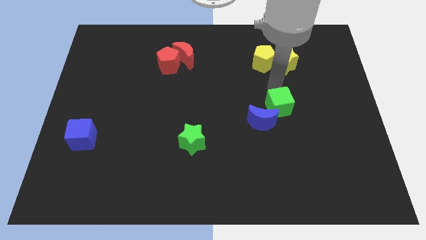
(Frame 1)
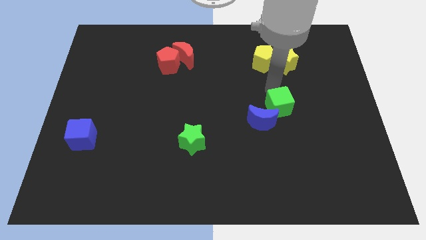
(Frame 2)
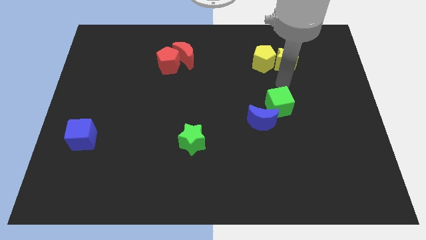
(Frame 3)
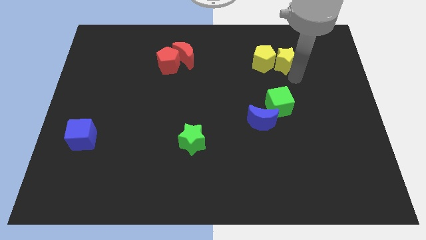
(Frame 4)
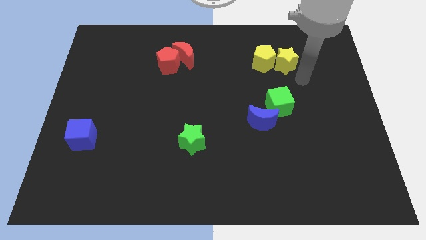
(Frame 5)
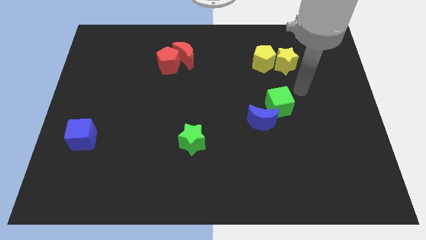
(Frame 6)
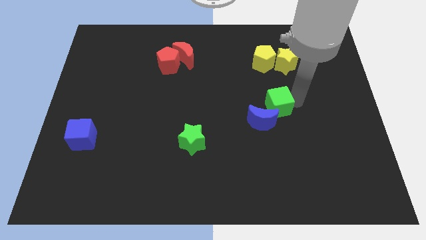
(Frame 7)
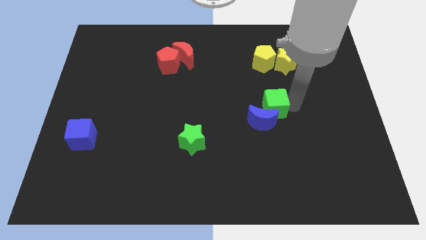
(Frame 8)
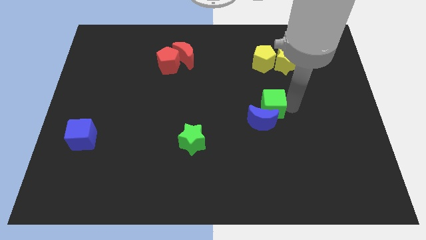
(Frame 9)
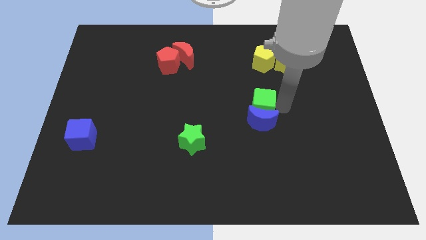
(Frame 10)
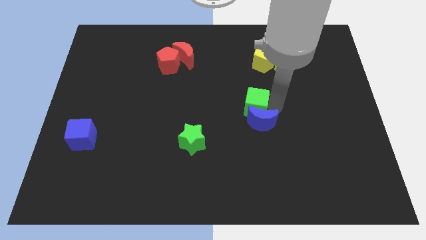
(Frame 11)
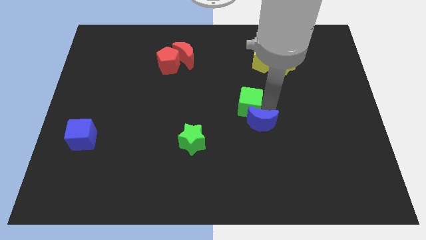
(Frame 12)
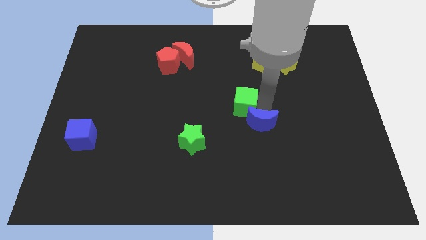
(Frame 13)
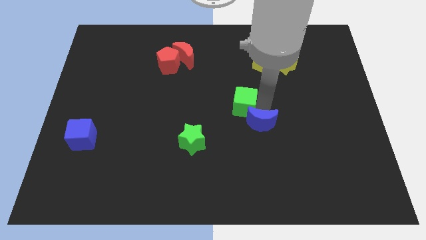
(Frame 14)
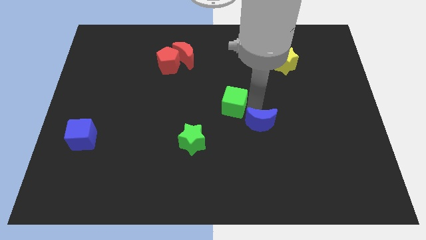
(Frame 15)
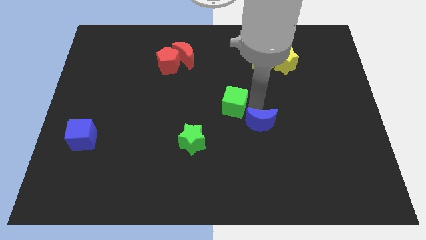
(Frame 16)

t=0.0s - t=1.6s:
push the green cube to the top left of the blue crescent

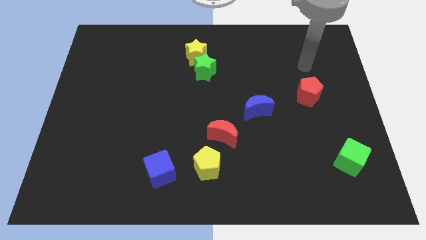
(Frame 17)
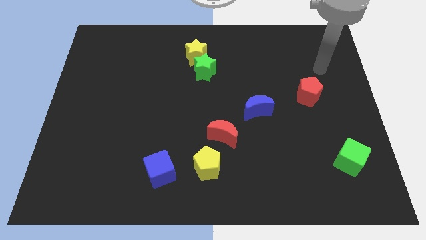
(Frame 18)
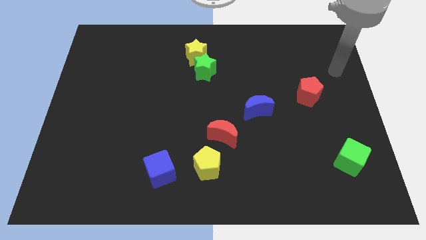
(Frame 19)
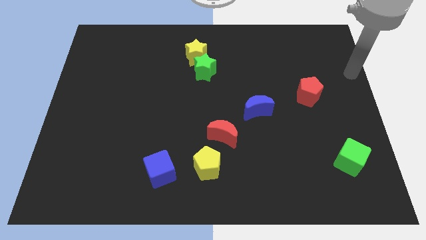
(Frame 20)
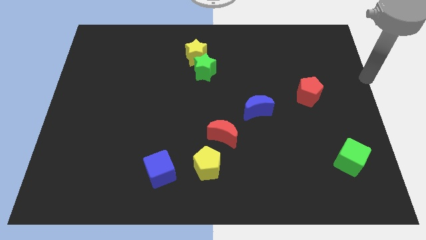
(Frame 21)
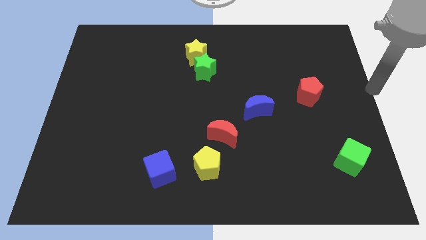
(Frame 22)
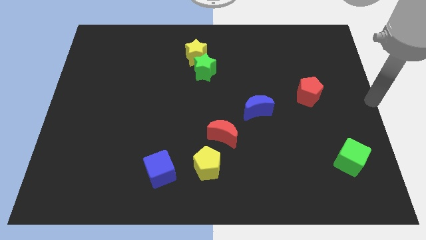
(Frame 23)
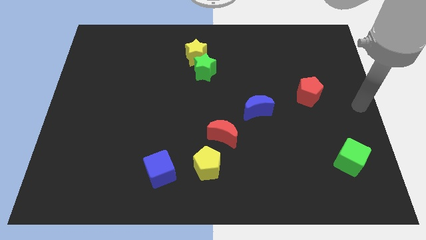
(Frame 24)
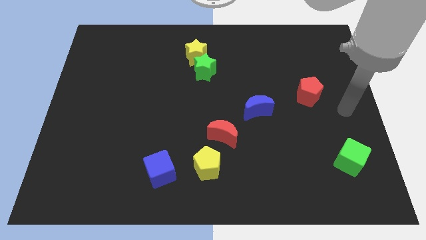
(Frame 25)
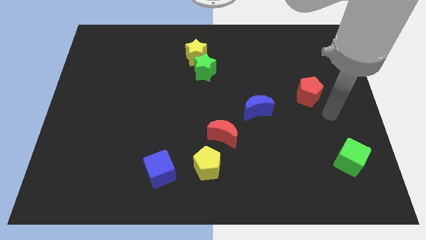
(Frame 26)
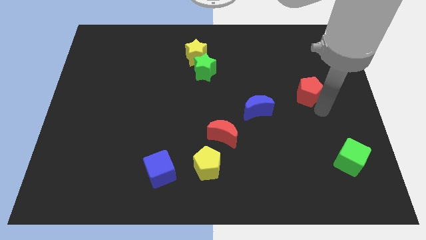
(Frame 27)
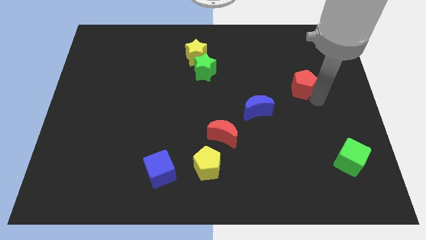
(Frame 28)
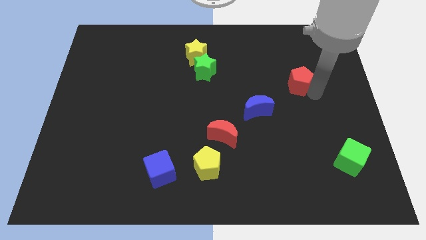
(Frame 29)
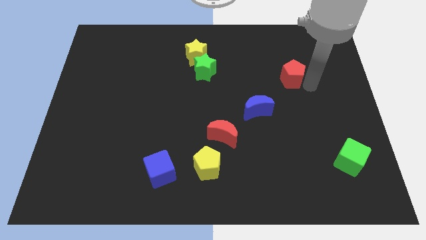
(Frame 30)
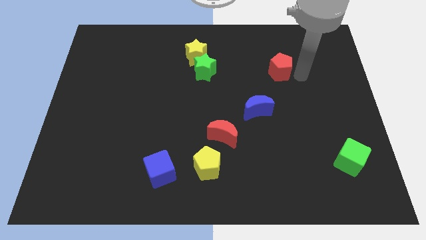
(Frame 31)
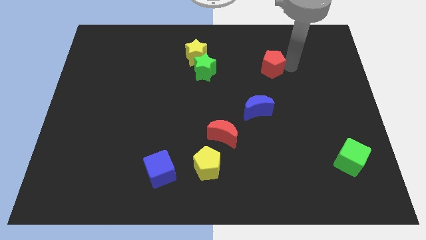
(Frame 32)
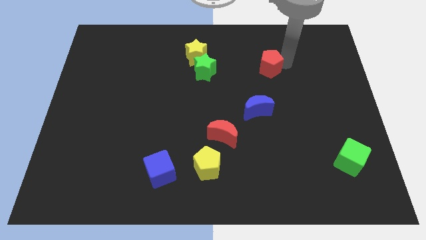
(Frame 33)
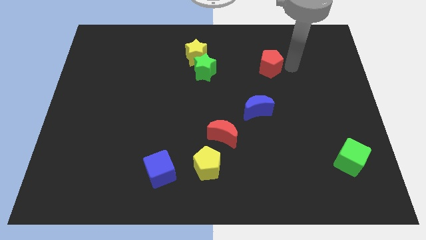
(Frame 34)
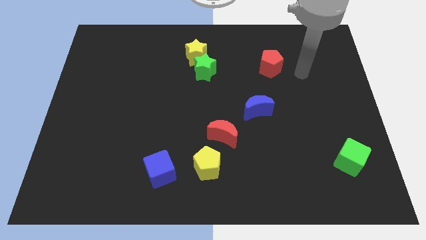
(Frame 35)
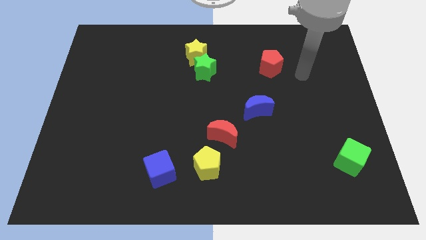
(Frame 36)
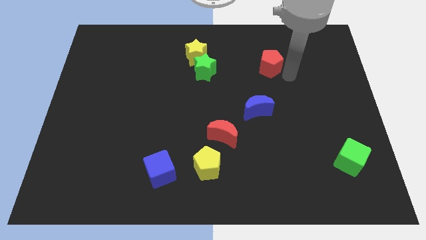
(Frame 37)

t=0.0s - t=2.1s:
drag the red pentagon towards top left side

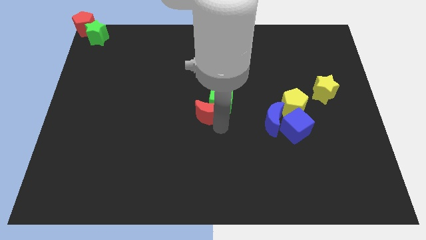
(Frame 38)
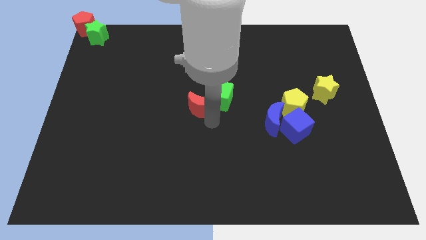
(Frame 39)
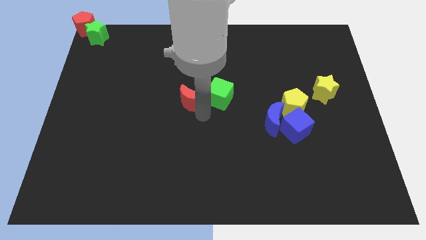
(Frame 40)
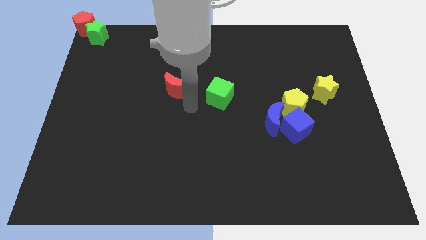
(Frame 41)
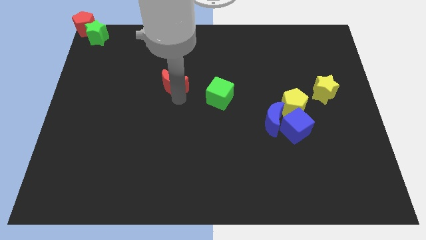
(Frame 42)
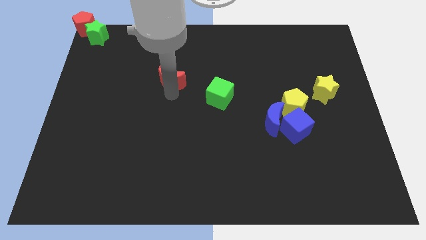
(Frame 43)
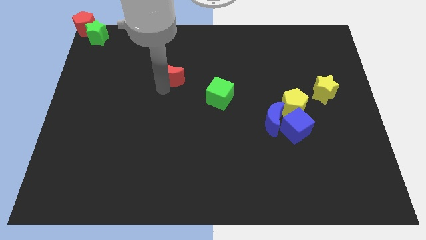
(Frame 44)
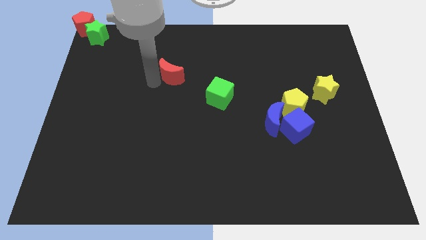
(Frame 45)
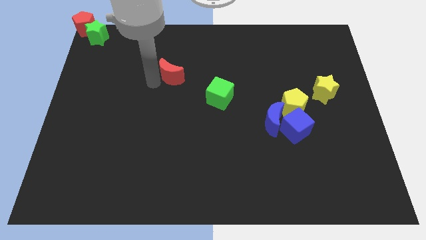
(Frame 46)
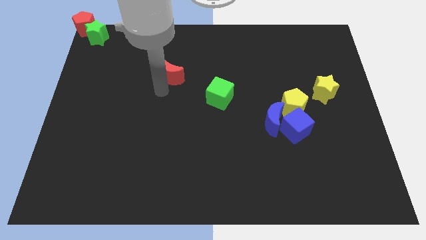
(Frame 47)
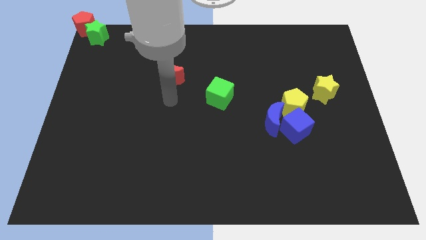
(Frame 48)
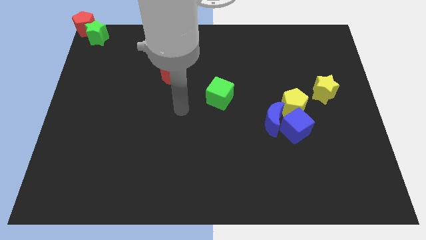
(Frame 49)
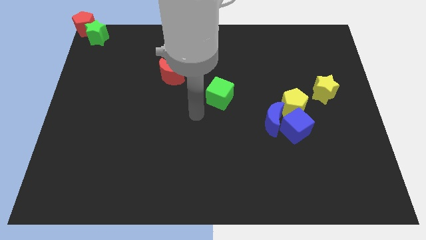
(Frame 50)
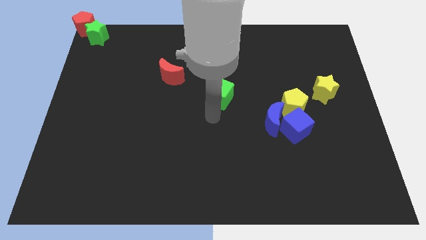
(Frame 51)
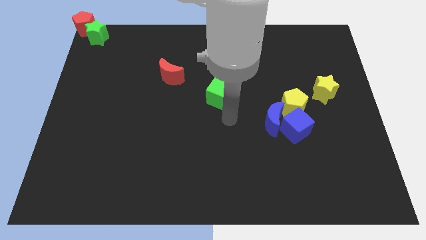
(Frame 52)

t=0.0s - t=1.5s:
move the red crescent to the top left of the green cube

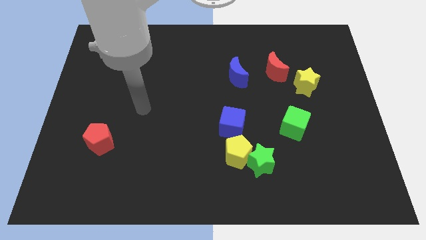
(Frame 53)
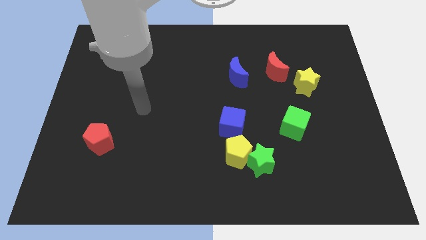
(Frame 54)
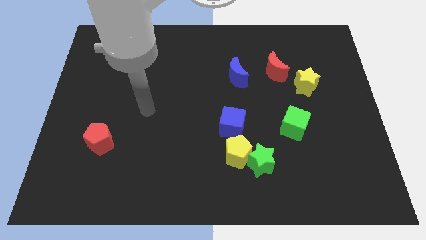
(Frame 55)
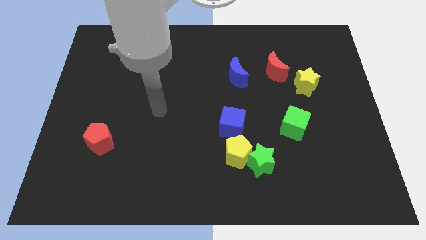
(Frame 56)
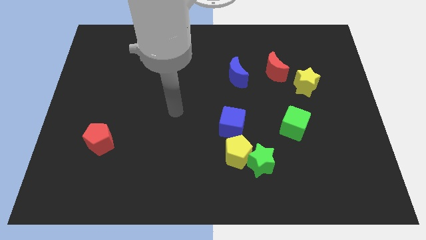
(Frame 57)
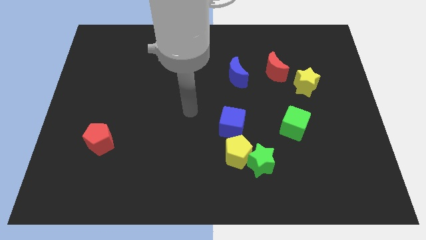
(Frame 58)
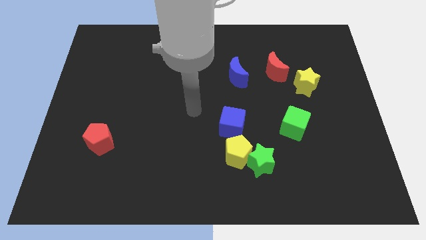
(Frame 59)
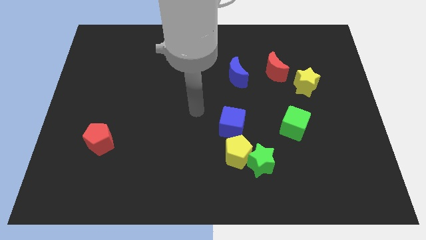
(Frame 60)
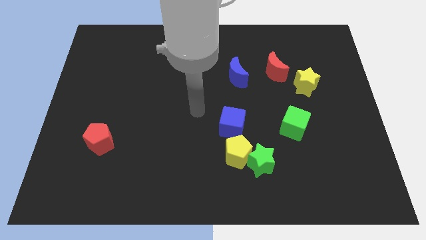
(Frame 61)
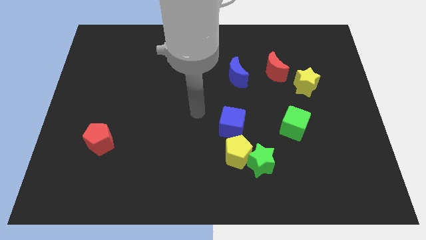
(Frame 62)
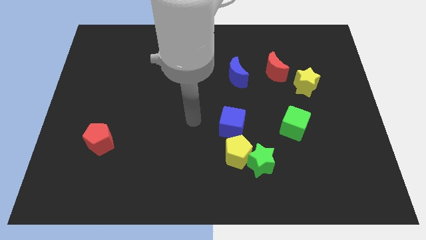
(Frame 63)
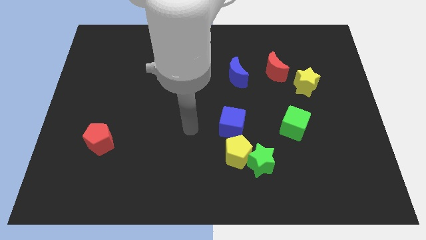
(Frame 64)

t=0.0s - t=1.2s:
point your arm at the center of the board

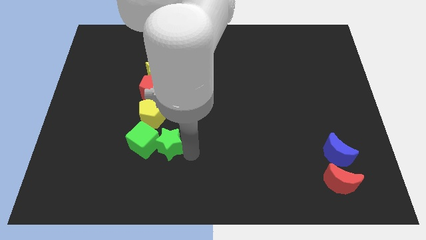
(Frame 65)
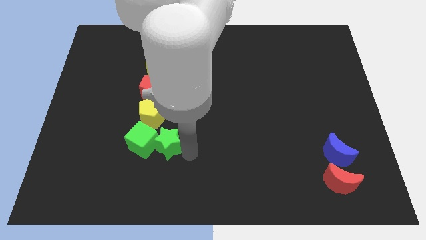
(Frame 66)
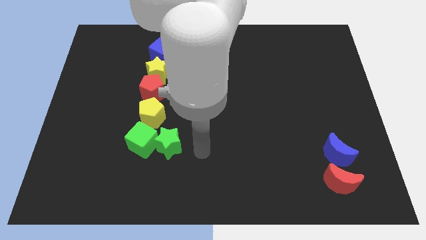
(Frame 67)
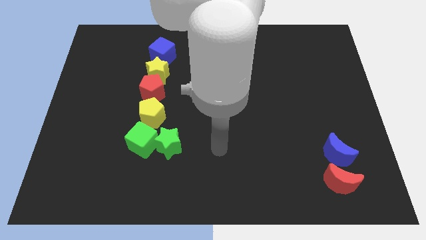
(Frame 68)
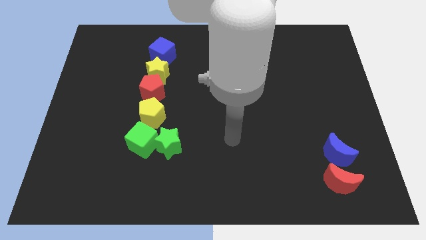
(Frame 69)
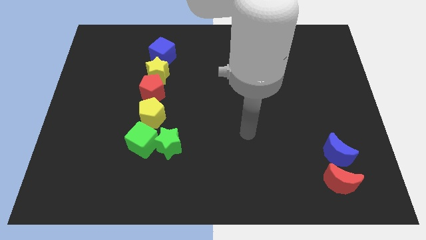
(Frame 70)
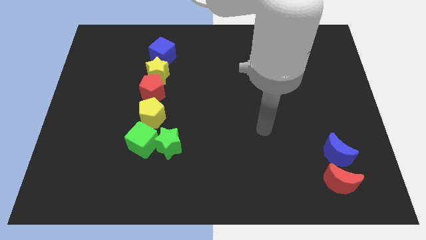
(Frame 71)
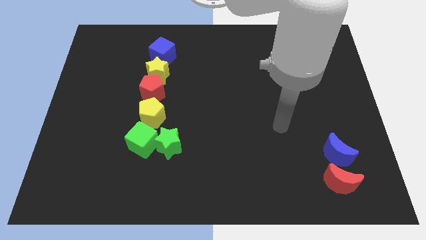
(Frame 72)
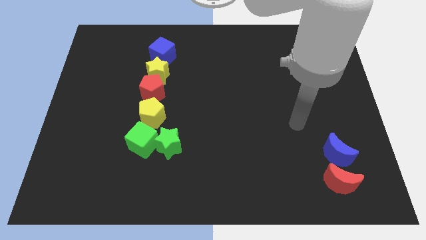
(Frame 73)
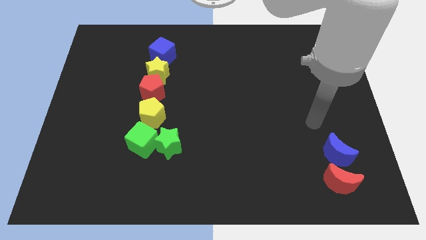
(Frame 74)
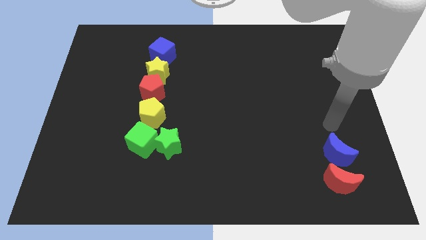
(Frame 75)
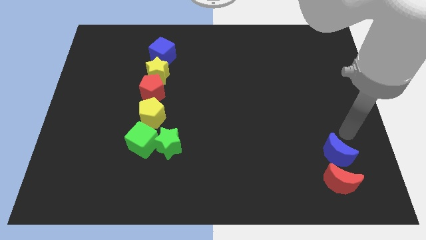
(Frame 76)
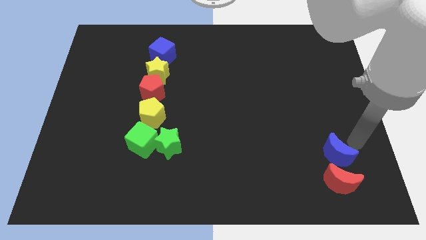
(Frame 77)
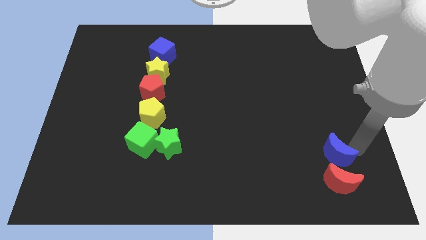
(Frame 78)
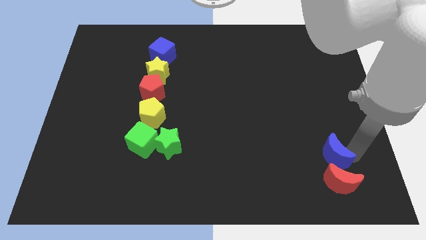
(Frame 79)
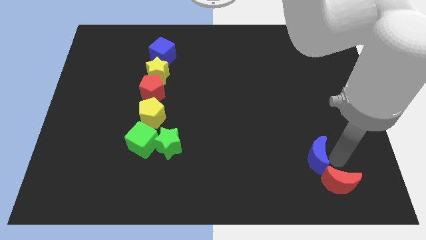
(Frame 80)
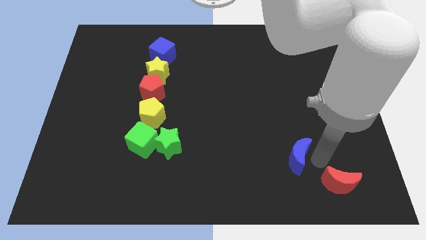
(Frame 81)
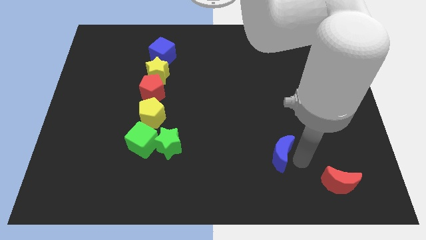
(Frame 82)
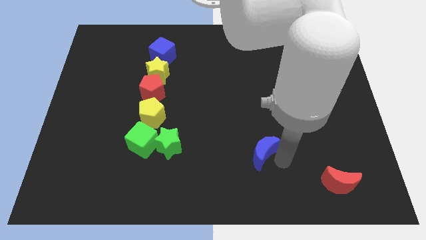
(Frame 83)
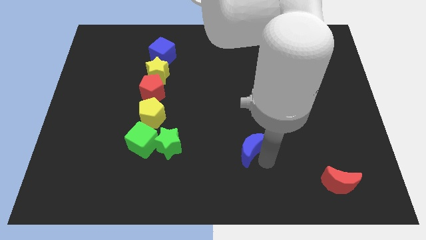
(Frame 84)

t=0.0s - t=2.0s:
push the blue moon diagonally top left to the red moon

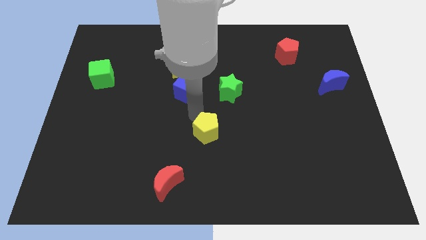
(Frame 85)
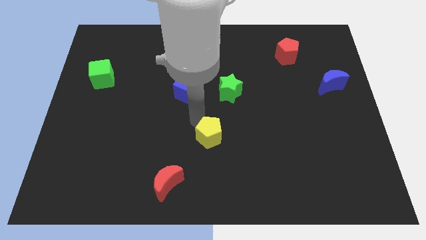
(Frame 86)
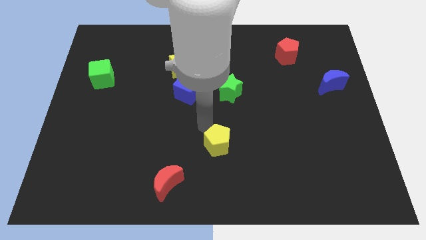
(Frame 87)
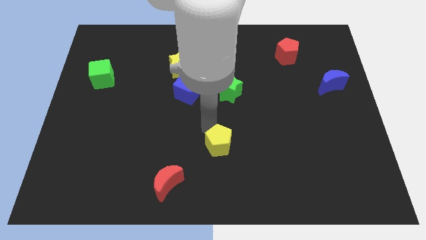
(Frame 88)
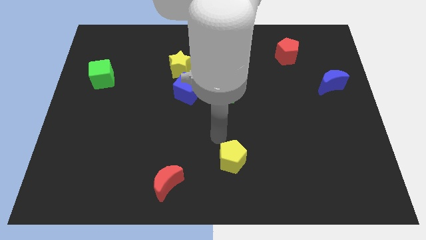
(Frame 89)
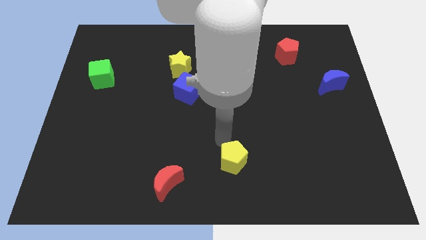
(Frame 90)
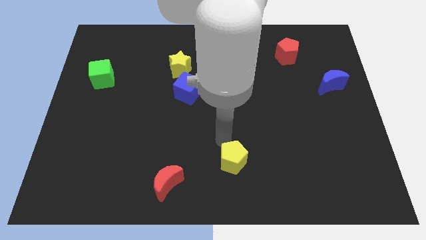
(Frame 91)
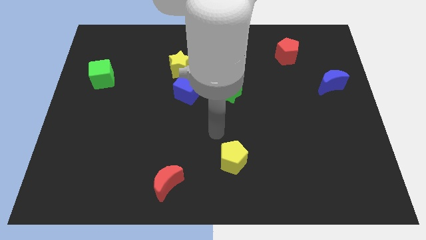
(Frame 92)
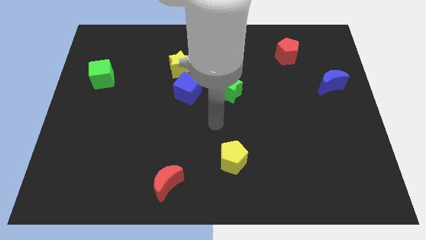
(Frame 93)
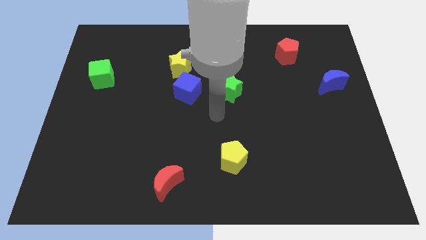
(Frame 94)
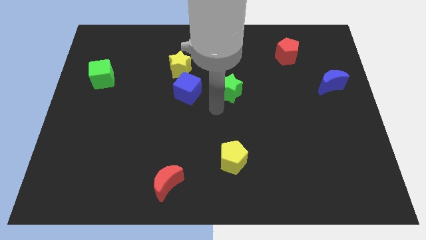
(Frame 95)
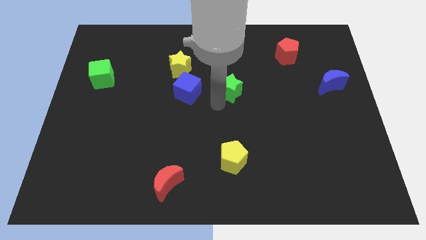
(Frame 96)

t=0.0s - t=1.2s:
move the yellow pentagon towards bottom side of the board
